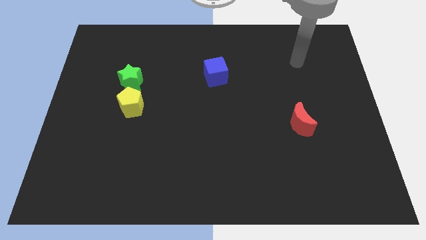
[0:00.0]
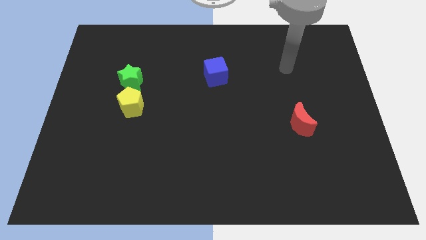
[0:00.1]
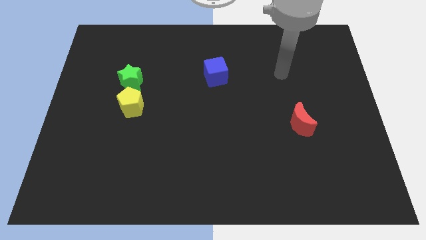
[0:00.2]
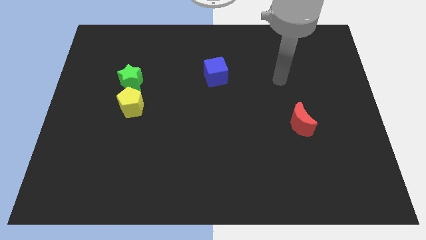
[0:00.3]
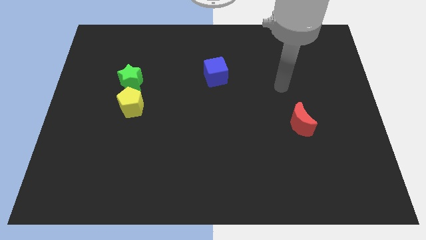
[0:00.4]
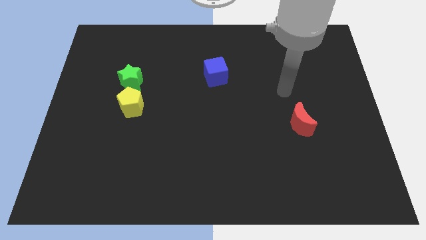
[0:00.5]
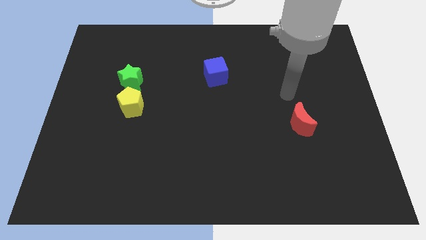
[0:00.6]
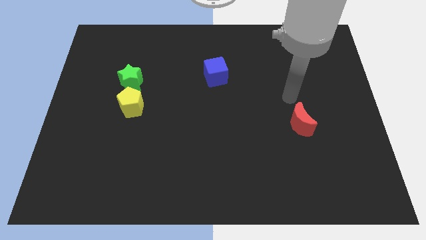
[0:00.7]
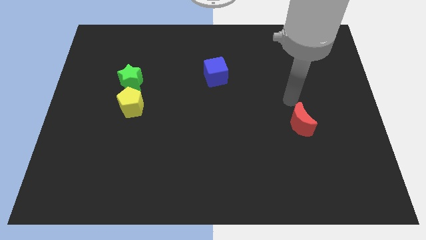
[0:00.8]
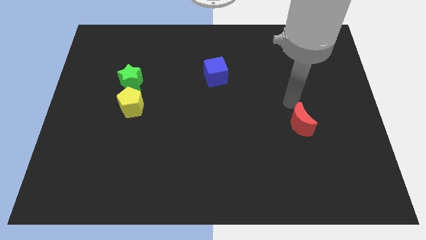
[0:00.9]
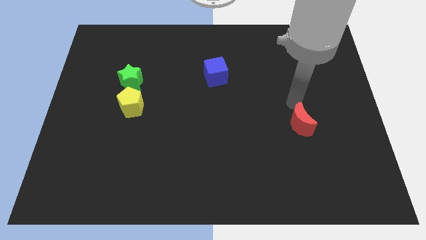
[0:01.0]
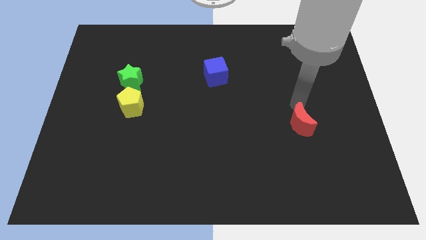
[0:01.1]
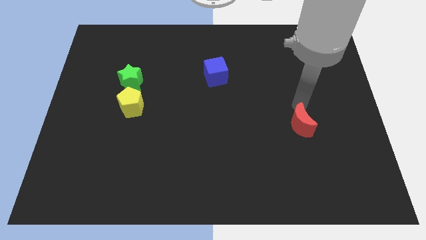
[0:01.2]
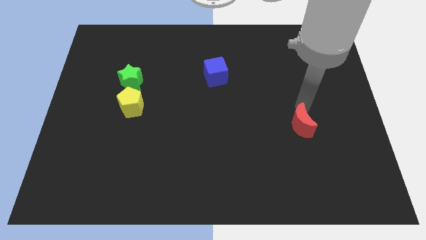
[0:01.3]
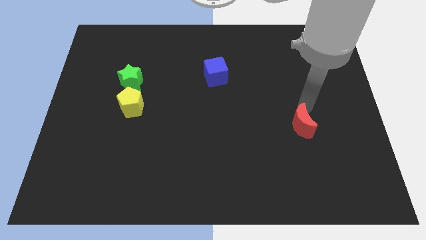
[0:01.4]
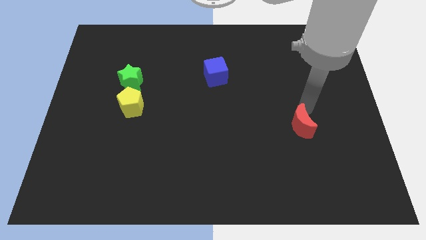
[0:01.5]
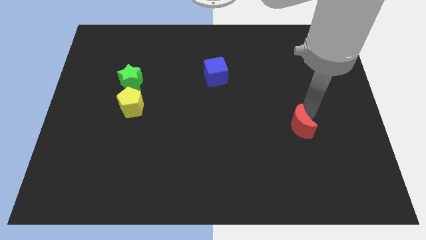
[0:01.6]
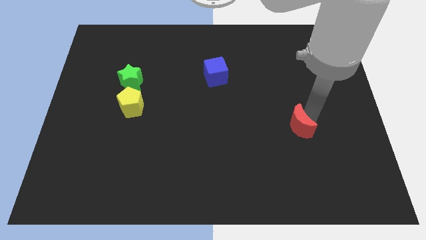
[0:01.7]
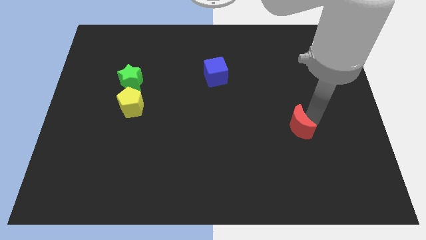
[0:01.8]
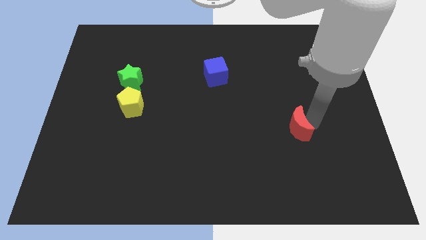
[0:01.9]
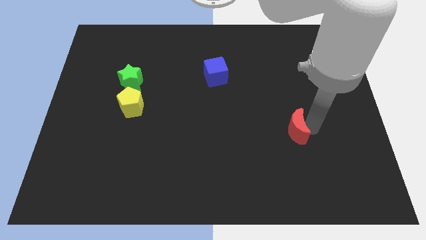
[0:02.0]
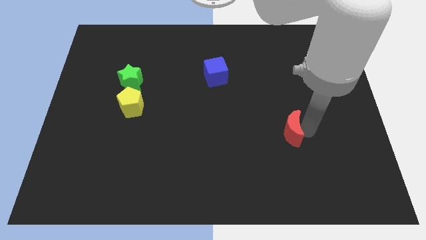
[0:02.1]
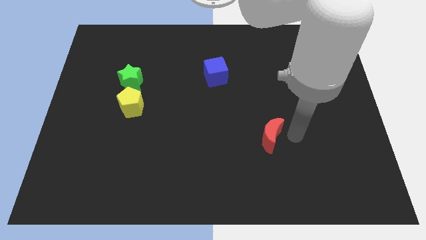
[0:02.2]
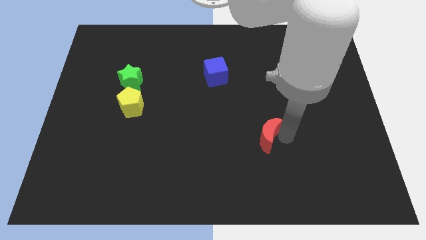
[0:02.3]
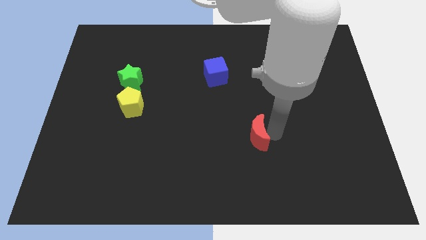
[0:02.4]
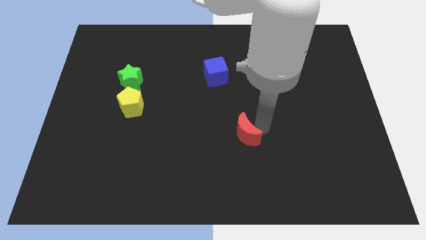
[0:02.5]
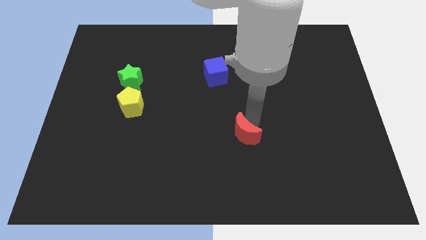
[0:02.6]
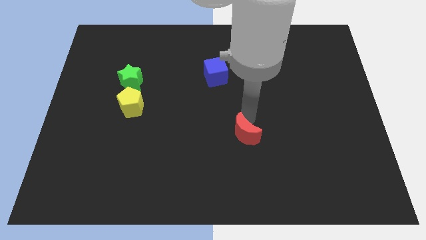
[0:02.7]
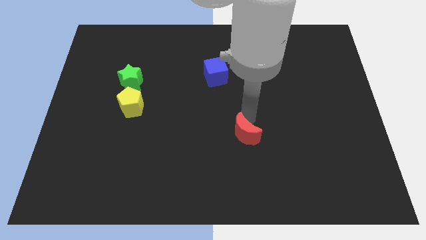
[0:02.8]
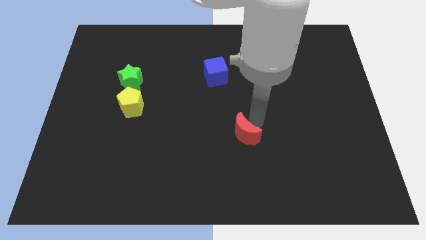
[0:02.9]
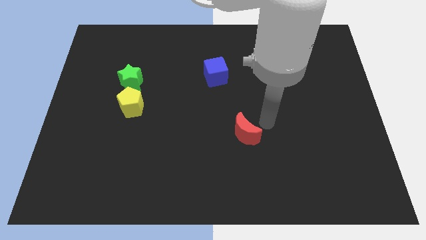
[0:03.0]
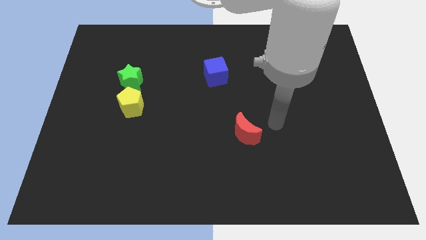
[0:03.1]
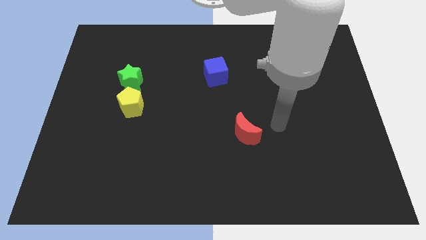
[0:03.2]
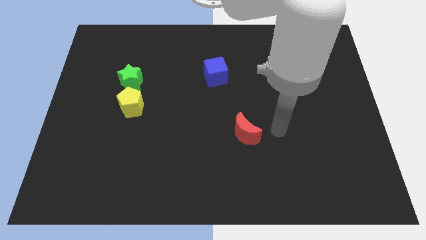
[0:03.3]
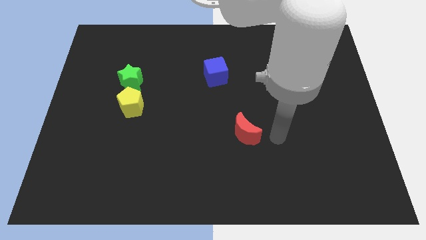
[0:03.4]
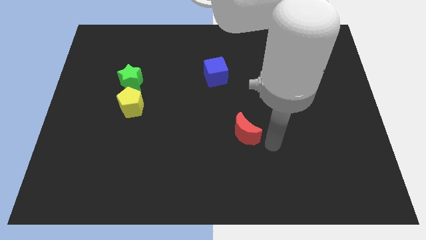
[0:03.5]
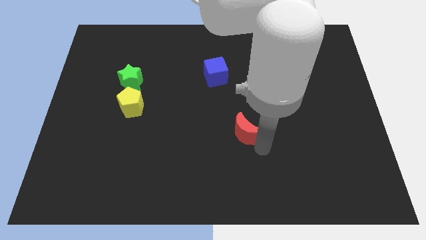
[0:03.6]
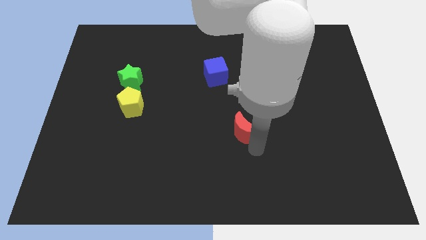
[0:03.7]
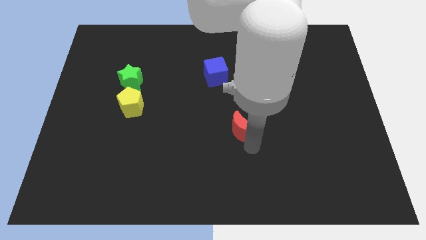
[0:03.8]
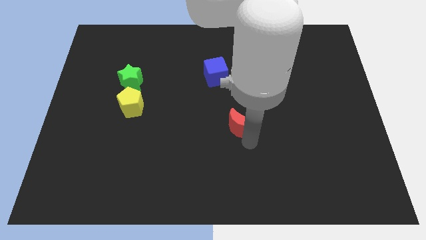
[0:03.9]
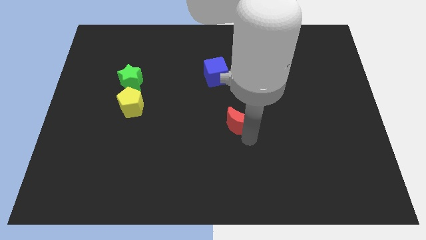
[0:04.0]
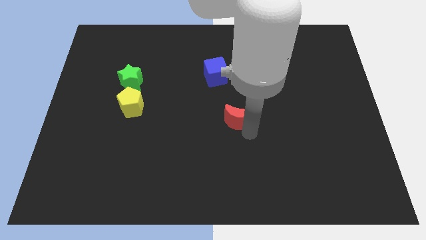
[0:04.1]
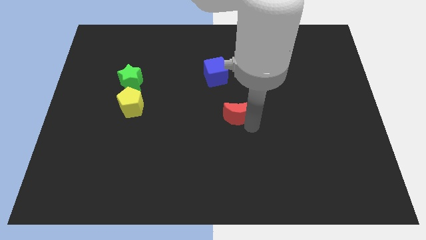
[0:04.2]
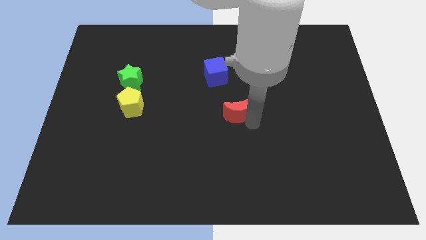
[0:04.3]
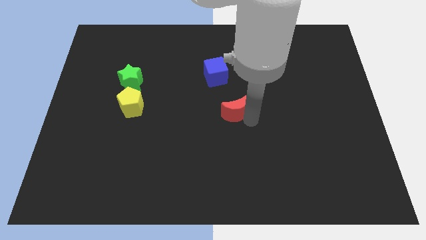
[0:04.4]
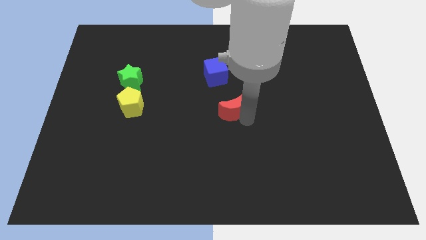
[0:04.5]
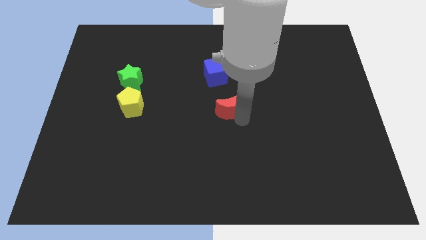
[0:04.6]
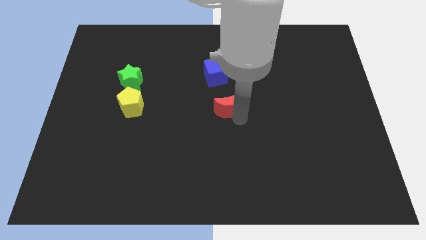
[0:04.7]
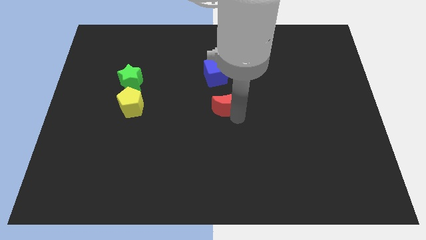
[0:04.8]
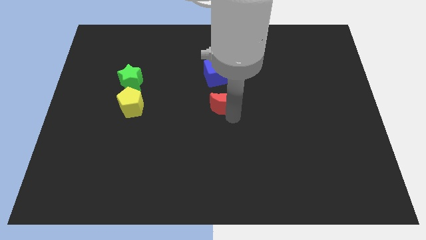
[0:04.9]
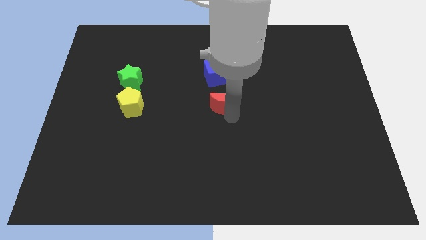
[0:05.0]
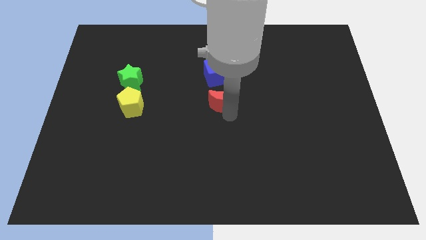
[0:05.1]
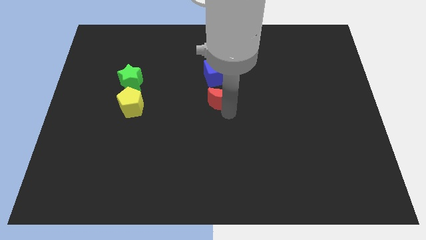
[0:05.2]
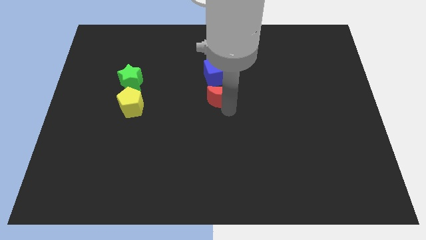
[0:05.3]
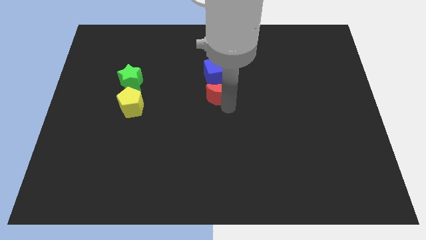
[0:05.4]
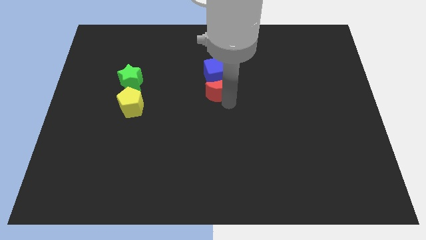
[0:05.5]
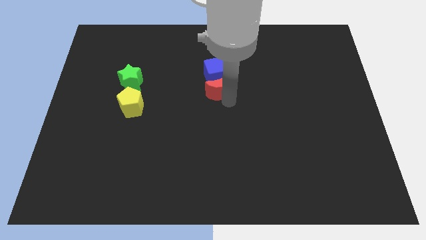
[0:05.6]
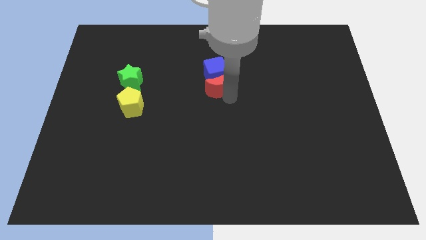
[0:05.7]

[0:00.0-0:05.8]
put the red block to the blue block

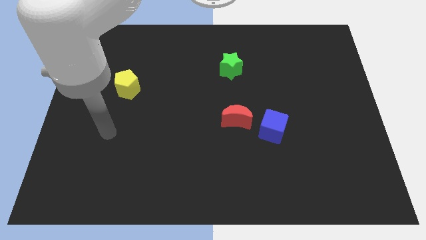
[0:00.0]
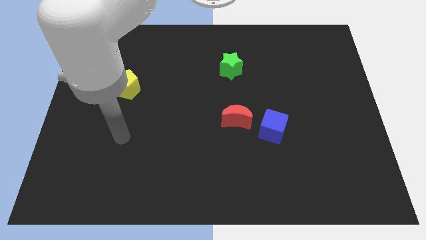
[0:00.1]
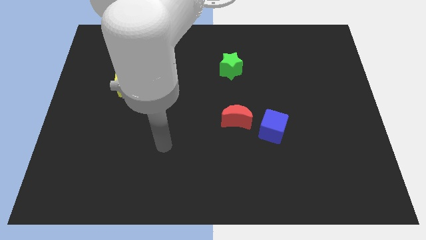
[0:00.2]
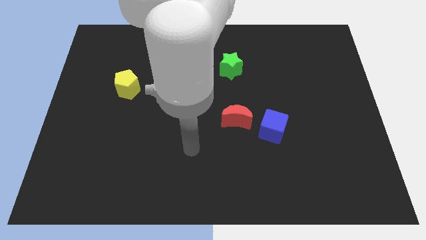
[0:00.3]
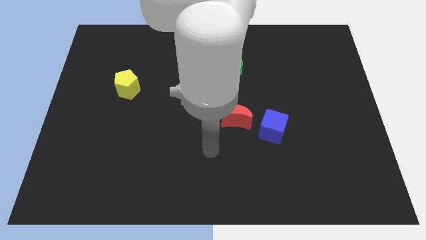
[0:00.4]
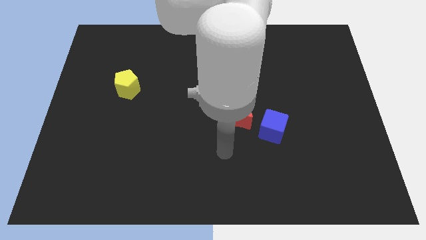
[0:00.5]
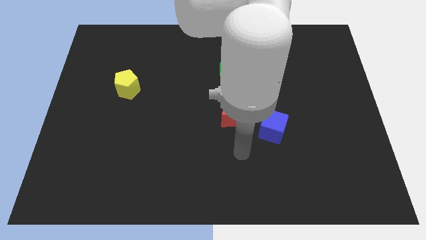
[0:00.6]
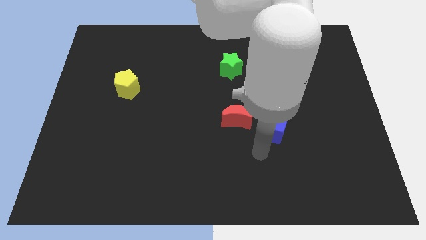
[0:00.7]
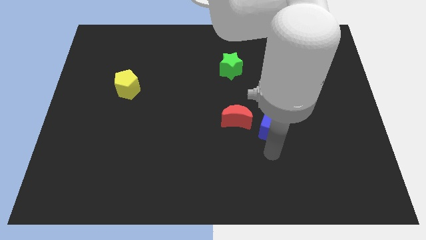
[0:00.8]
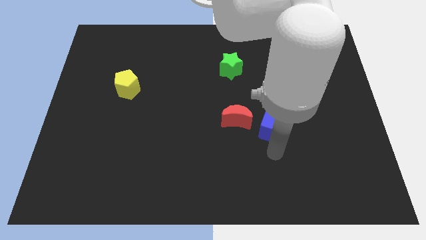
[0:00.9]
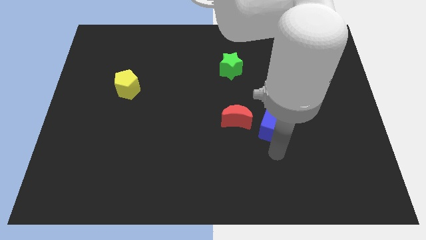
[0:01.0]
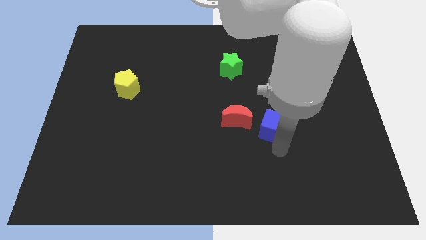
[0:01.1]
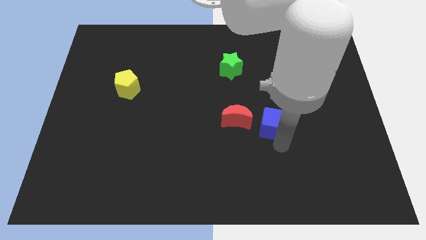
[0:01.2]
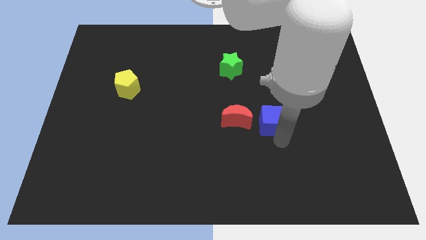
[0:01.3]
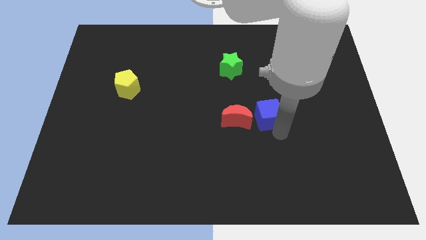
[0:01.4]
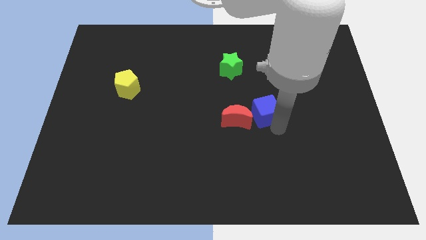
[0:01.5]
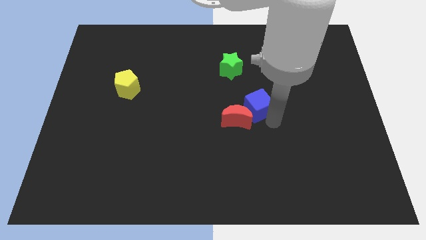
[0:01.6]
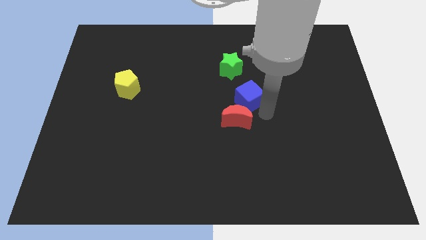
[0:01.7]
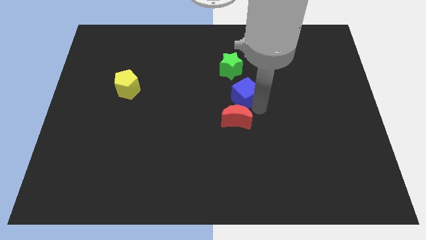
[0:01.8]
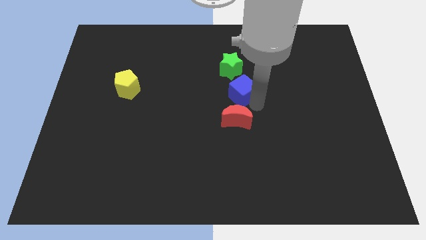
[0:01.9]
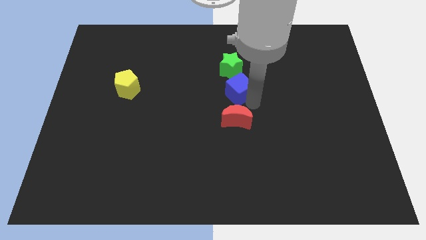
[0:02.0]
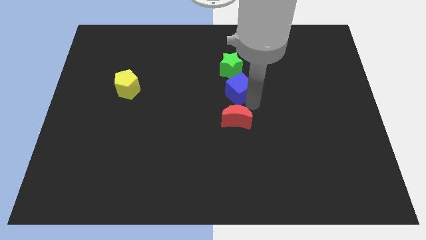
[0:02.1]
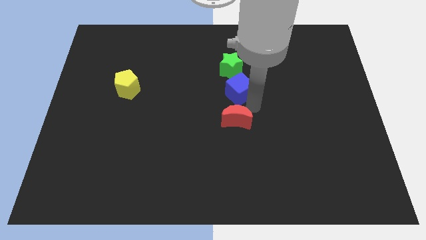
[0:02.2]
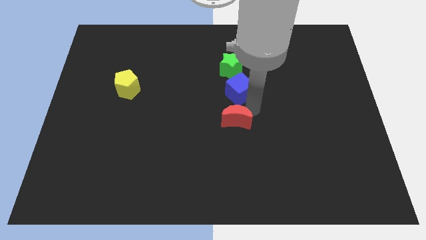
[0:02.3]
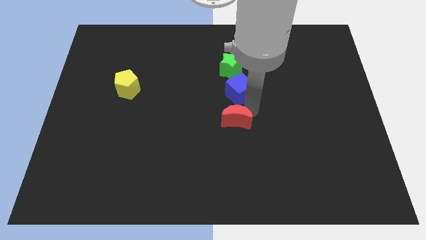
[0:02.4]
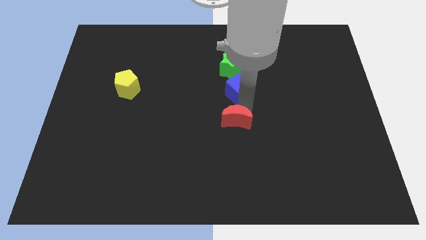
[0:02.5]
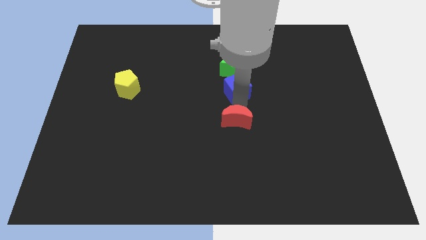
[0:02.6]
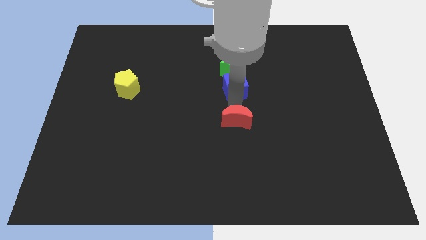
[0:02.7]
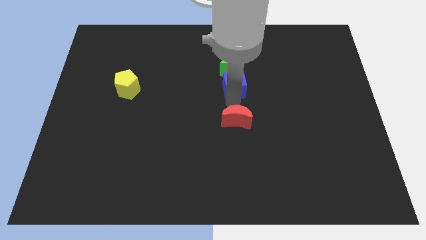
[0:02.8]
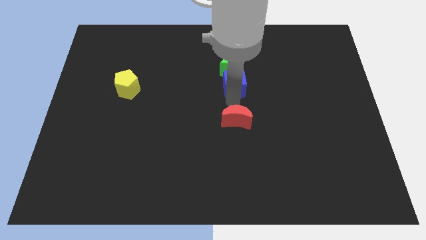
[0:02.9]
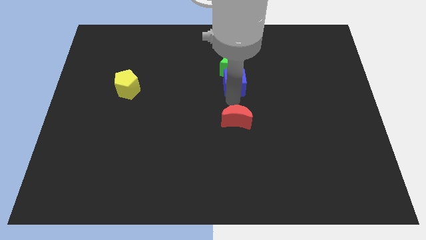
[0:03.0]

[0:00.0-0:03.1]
move the blue block close to the green star
